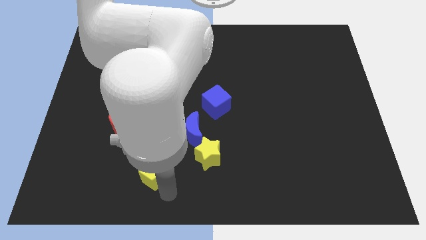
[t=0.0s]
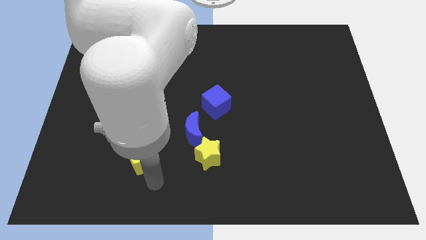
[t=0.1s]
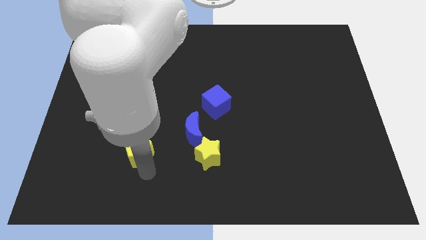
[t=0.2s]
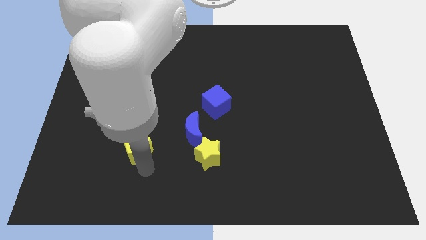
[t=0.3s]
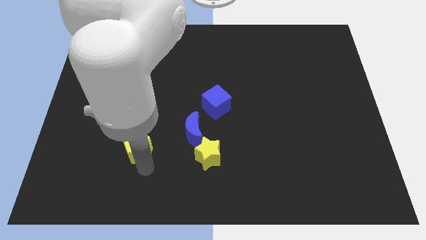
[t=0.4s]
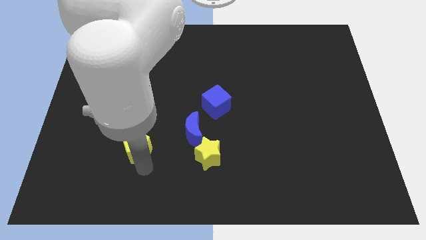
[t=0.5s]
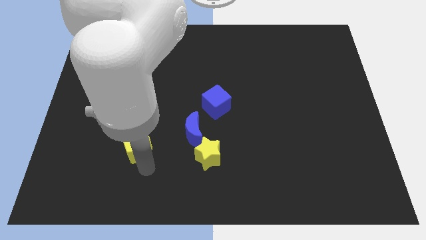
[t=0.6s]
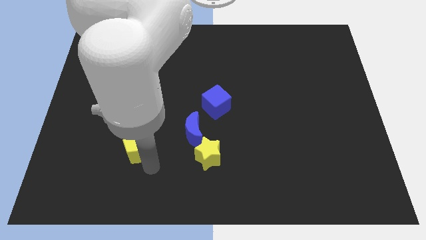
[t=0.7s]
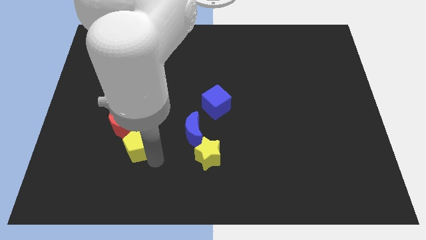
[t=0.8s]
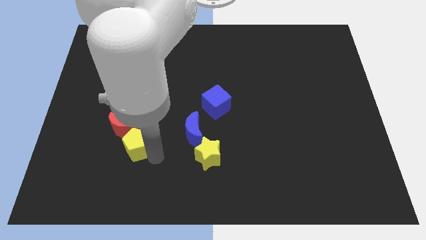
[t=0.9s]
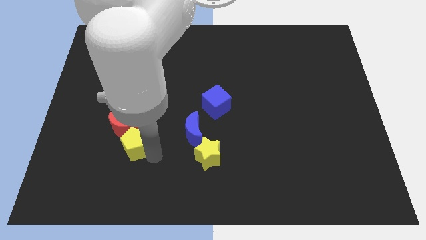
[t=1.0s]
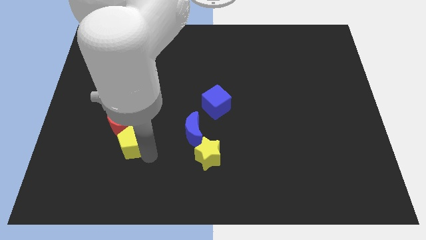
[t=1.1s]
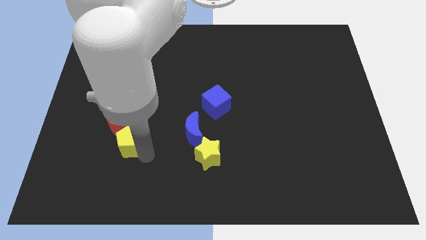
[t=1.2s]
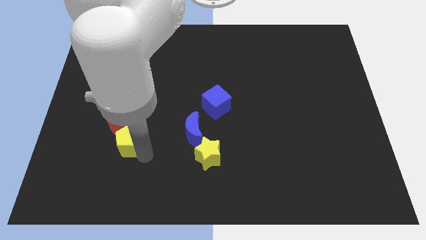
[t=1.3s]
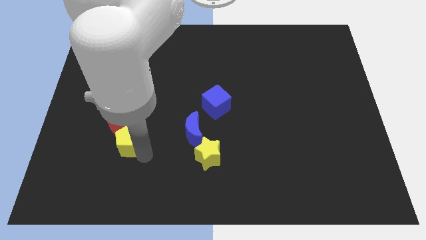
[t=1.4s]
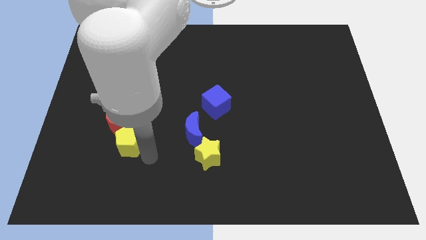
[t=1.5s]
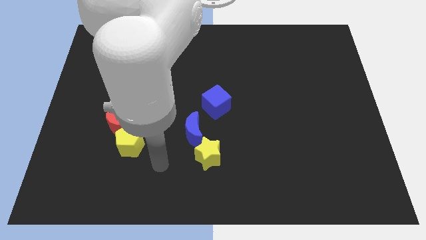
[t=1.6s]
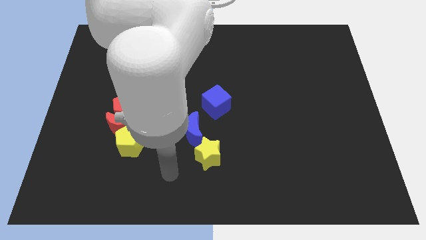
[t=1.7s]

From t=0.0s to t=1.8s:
push the yellow pentagon slightly upwards

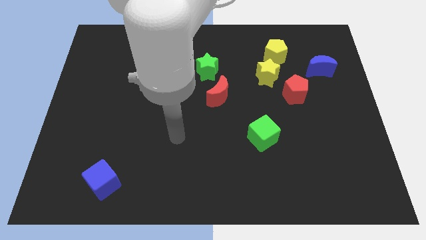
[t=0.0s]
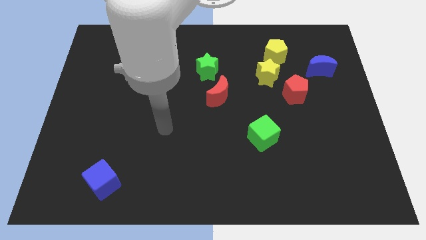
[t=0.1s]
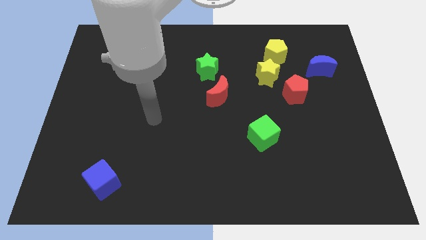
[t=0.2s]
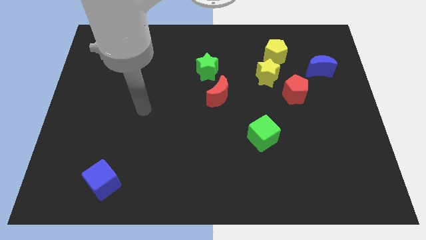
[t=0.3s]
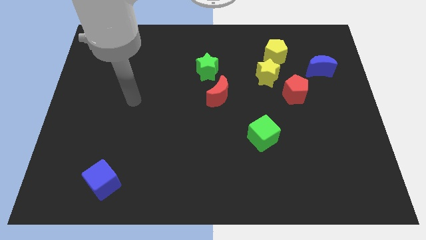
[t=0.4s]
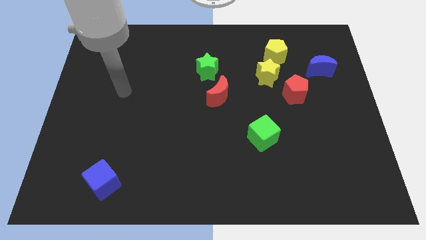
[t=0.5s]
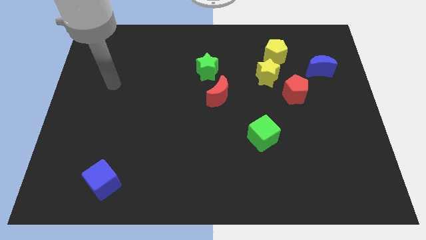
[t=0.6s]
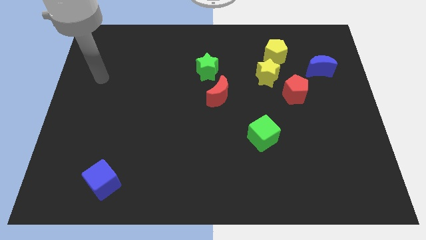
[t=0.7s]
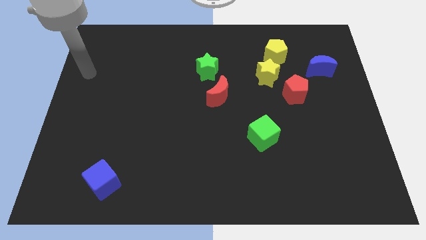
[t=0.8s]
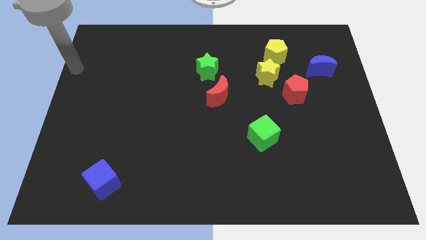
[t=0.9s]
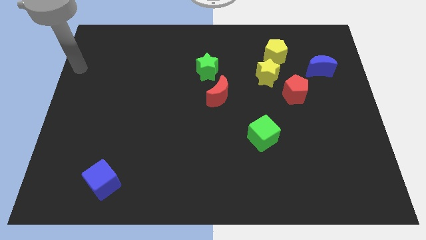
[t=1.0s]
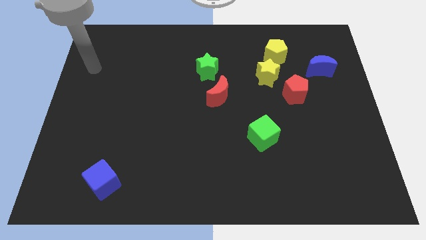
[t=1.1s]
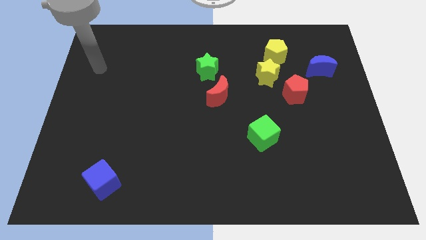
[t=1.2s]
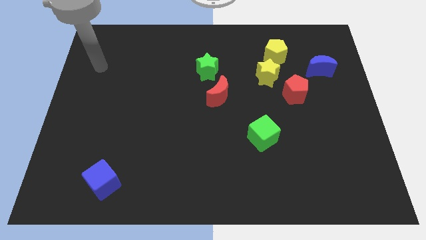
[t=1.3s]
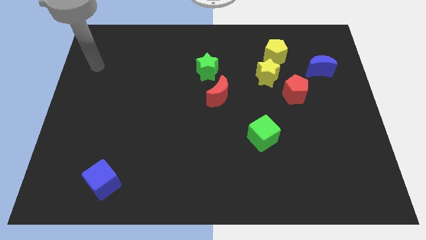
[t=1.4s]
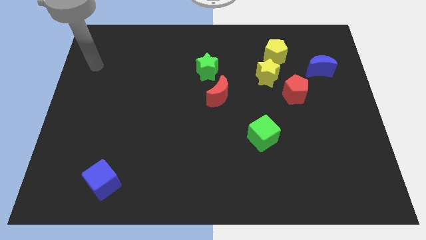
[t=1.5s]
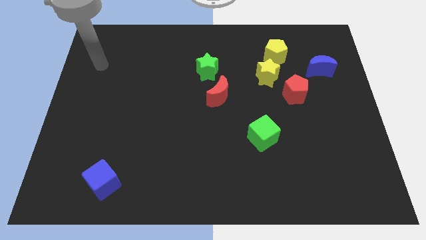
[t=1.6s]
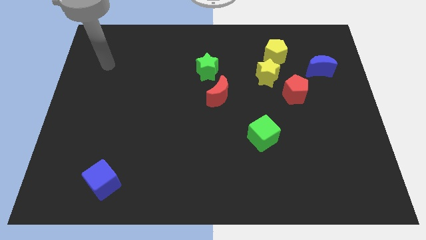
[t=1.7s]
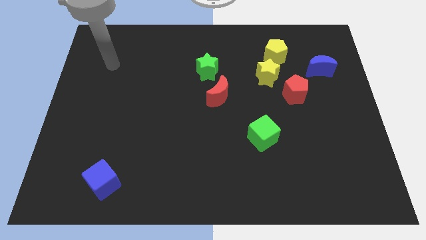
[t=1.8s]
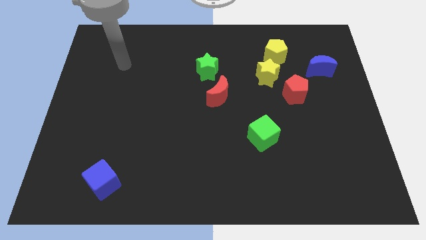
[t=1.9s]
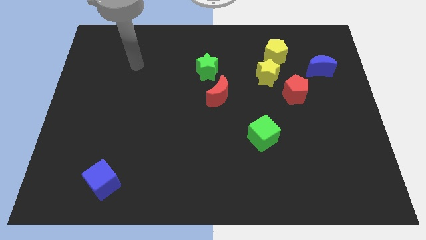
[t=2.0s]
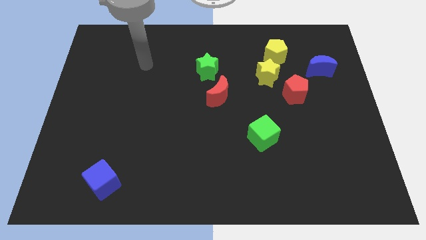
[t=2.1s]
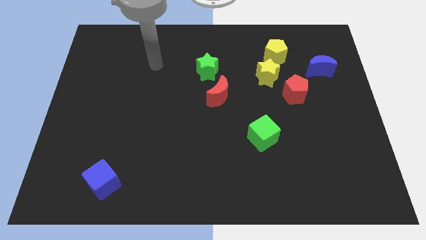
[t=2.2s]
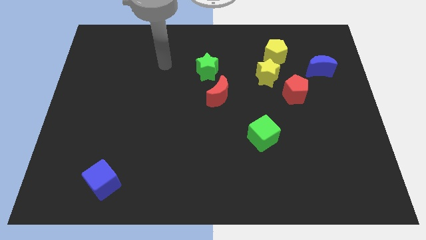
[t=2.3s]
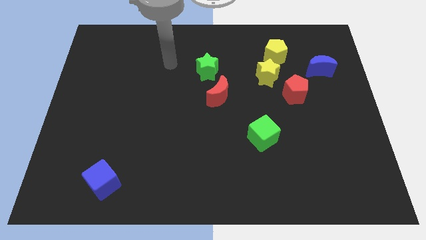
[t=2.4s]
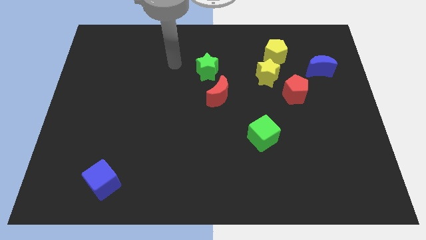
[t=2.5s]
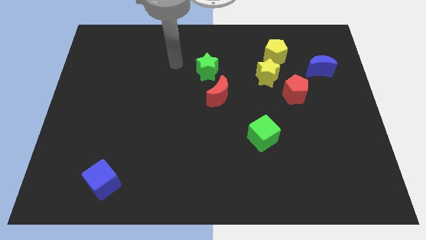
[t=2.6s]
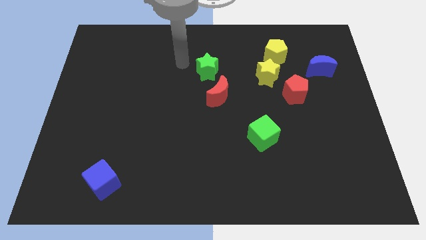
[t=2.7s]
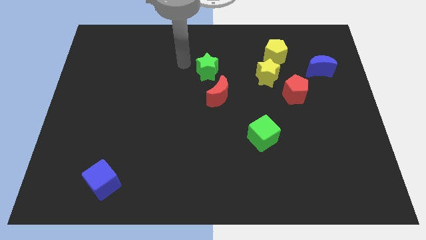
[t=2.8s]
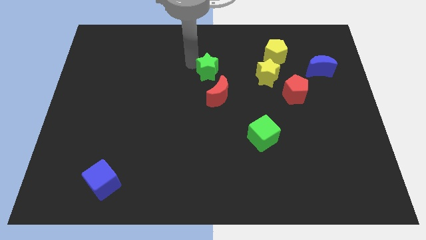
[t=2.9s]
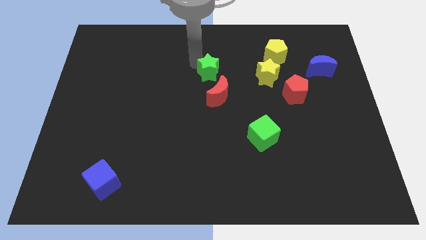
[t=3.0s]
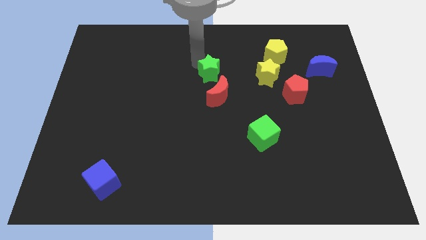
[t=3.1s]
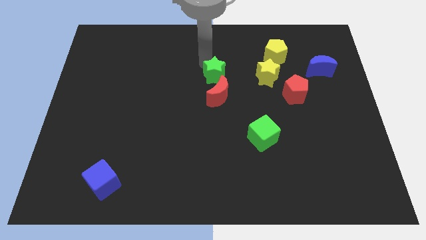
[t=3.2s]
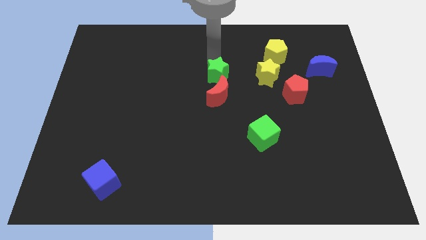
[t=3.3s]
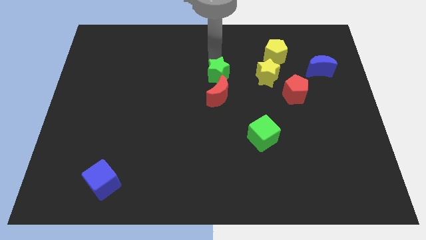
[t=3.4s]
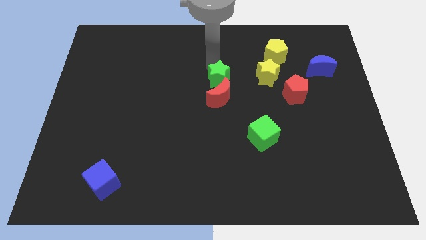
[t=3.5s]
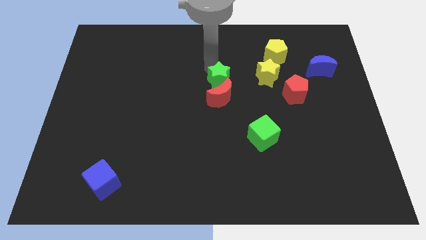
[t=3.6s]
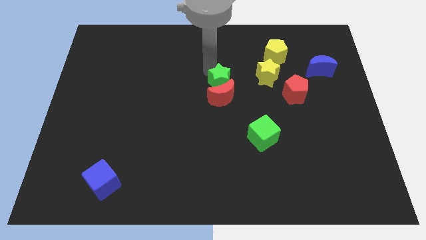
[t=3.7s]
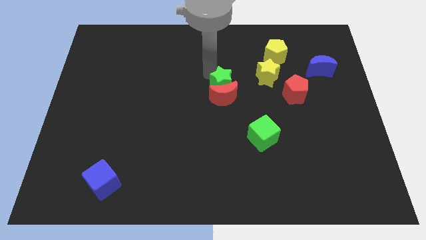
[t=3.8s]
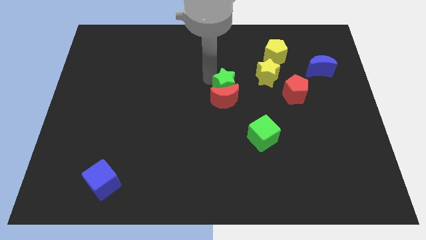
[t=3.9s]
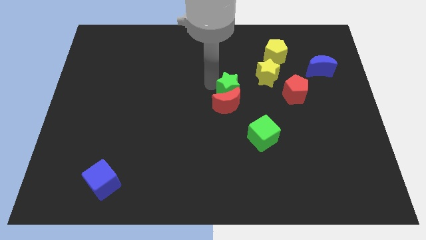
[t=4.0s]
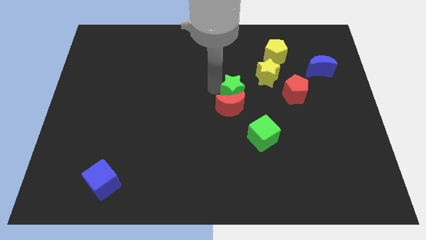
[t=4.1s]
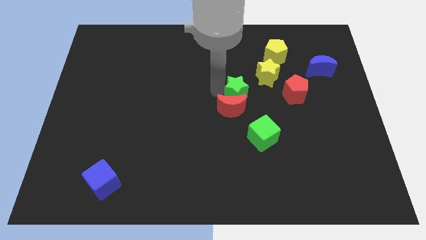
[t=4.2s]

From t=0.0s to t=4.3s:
move the green star to the top of the red crescent

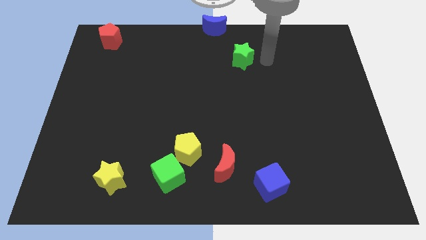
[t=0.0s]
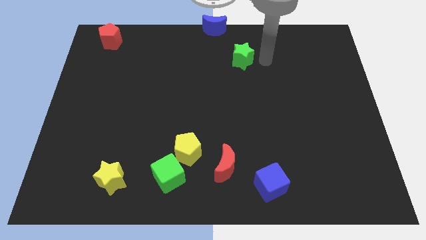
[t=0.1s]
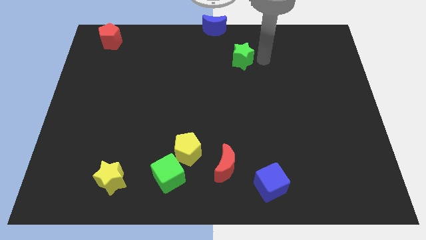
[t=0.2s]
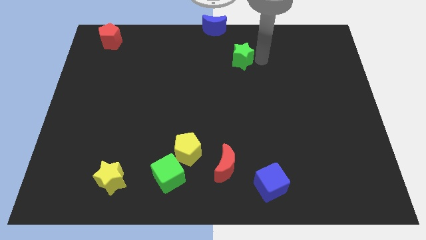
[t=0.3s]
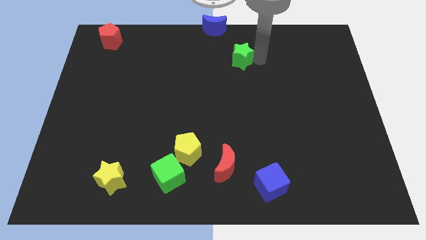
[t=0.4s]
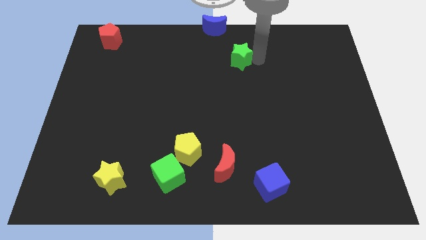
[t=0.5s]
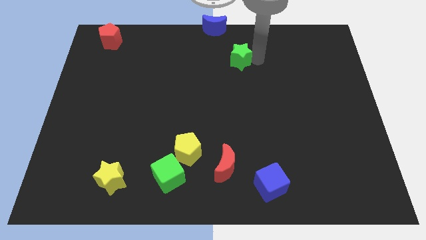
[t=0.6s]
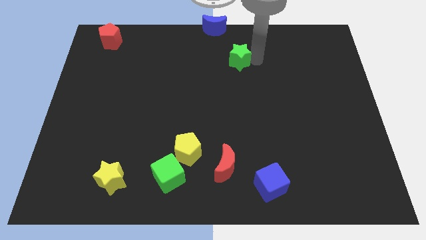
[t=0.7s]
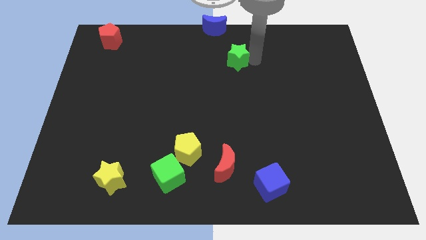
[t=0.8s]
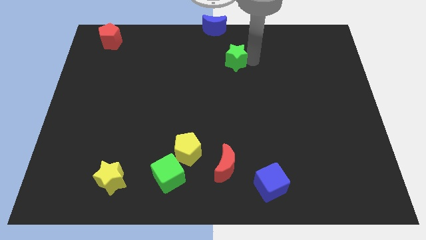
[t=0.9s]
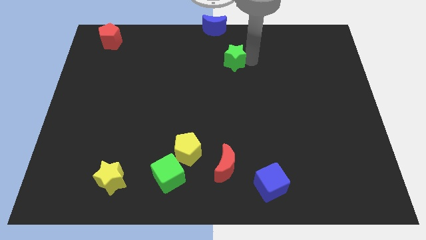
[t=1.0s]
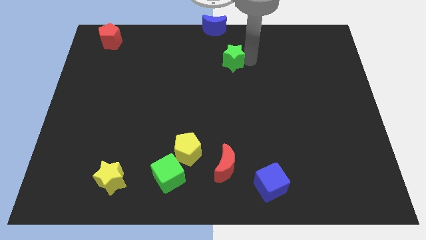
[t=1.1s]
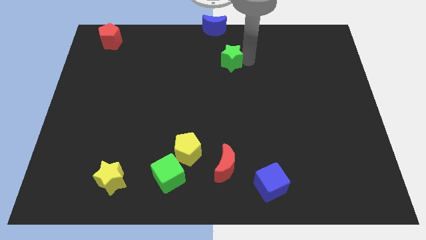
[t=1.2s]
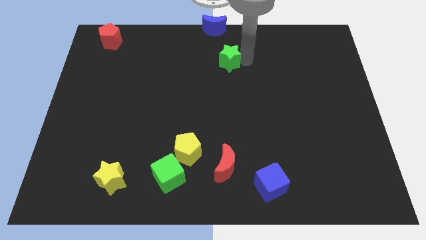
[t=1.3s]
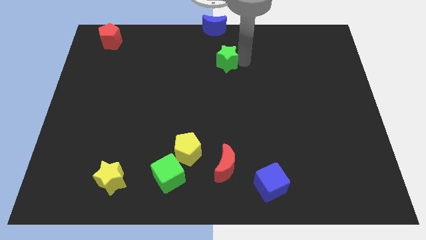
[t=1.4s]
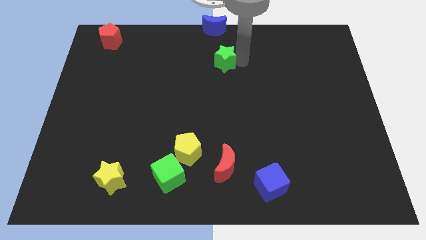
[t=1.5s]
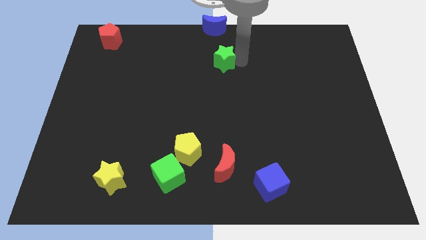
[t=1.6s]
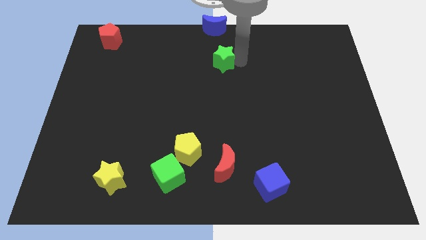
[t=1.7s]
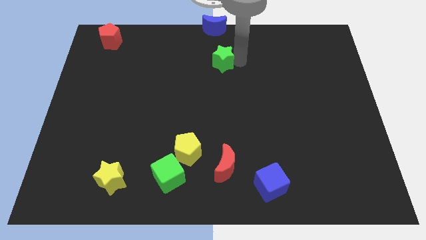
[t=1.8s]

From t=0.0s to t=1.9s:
place the green star below the blue moon

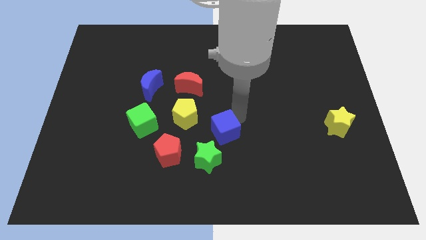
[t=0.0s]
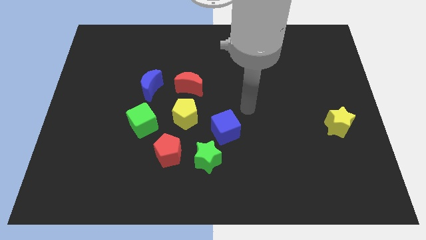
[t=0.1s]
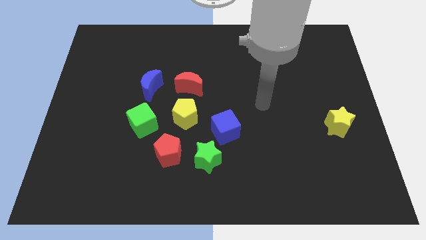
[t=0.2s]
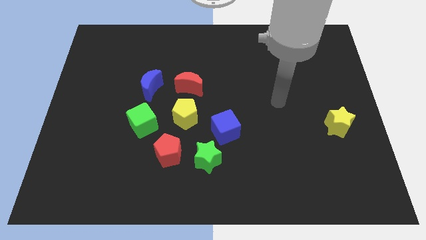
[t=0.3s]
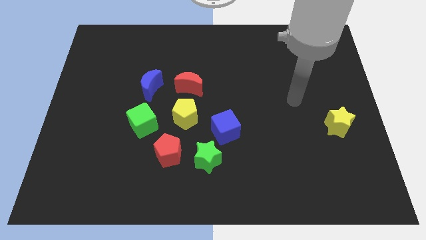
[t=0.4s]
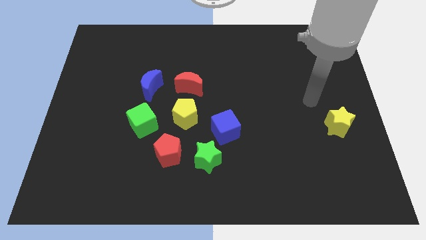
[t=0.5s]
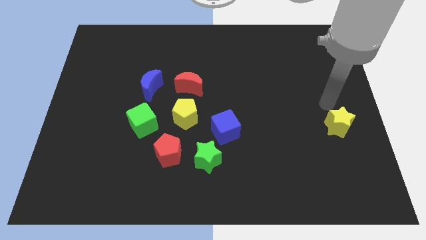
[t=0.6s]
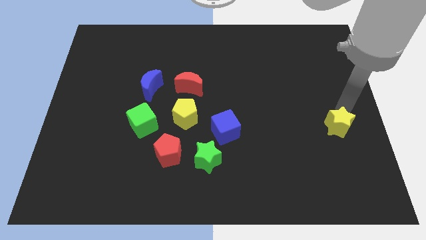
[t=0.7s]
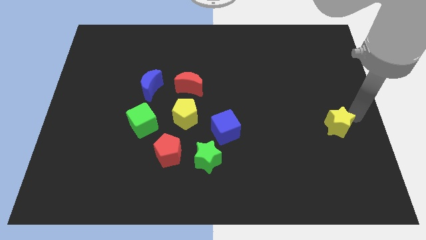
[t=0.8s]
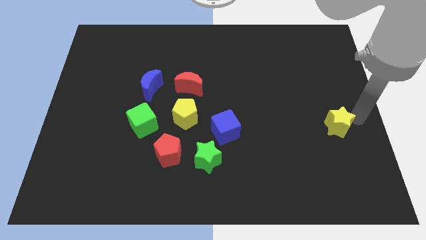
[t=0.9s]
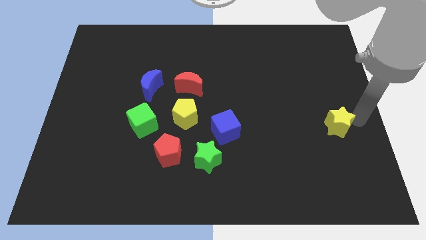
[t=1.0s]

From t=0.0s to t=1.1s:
move your arm to the right side of the yellow star
